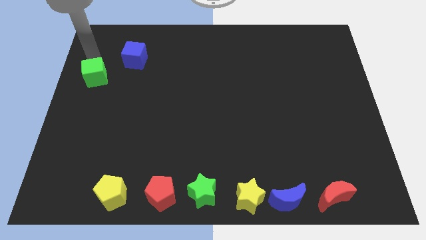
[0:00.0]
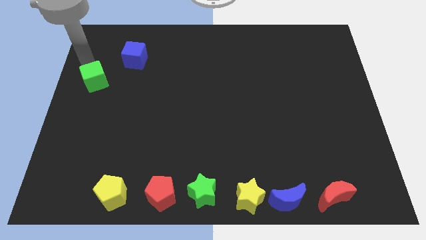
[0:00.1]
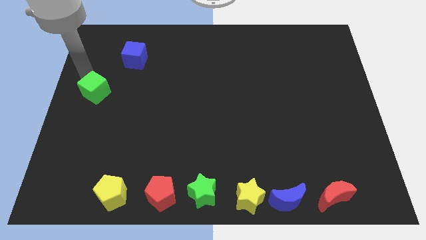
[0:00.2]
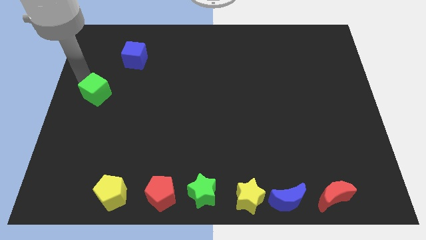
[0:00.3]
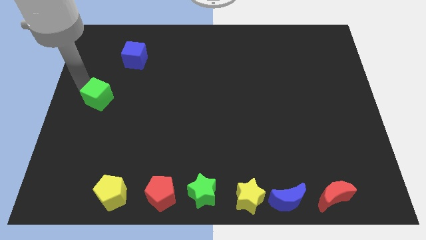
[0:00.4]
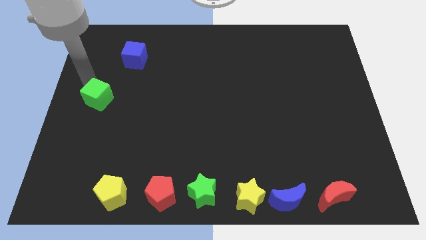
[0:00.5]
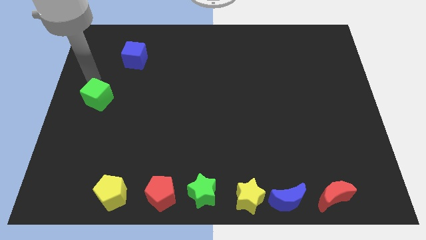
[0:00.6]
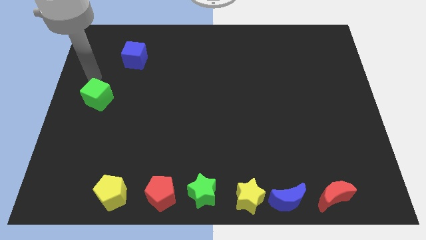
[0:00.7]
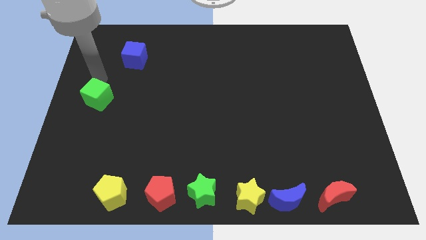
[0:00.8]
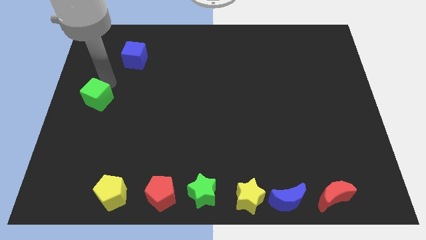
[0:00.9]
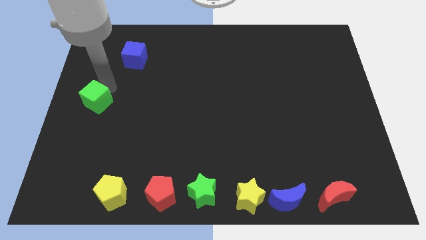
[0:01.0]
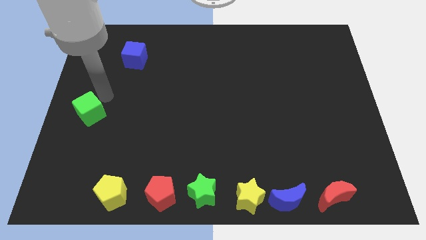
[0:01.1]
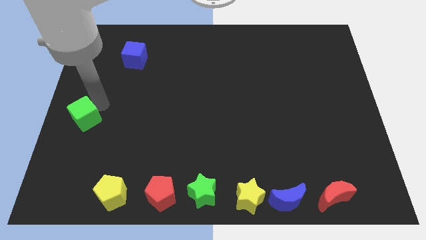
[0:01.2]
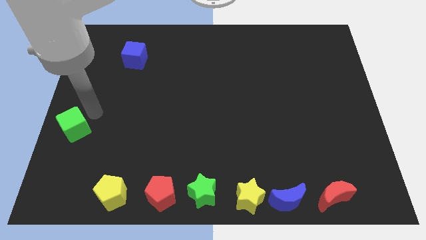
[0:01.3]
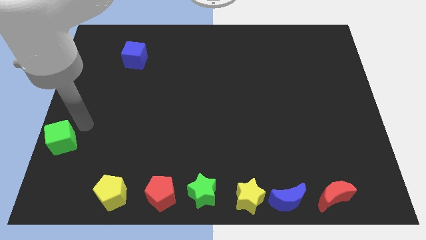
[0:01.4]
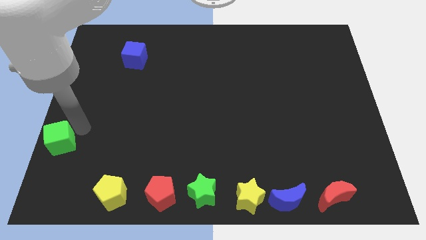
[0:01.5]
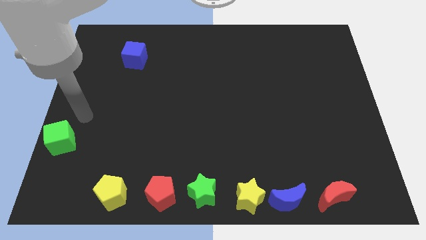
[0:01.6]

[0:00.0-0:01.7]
move the green cube towards bottom left side of the board

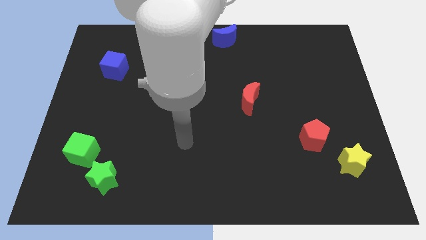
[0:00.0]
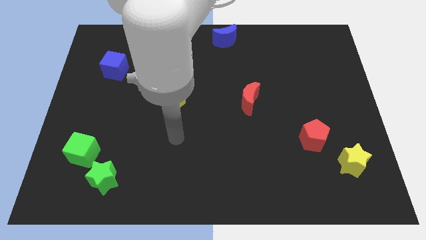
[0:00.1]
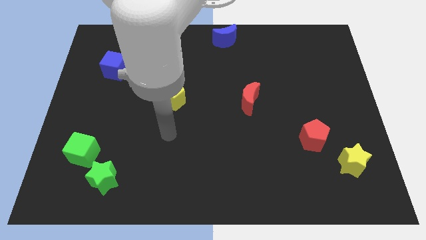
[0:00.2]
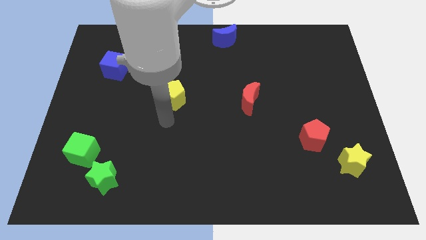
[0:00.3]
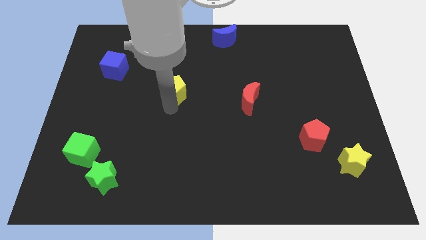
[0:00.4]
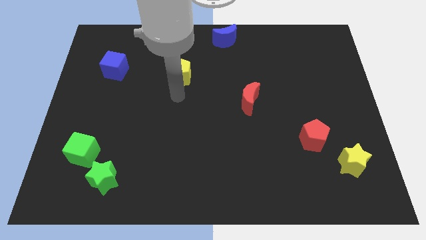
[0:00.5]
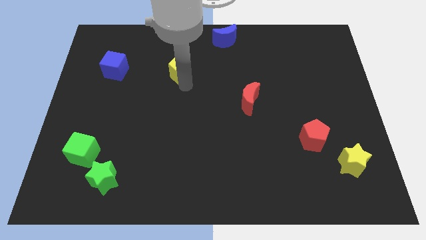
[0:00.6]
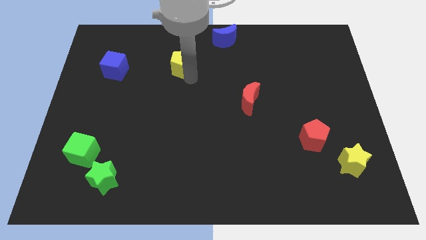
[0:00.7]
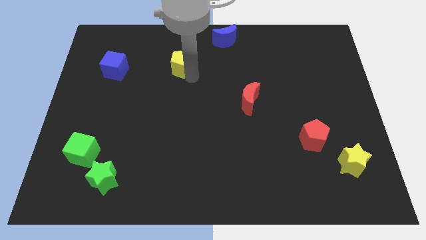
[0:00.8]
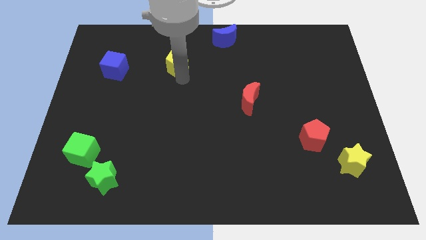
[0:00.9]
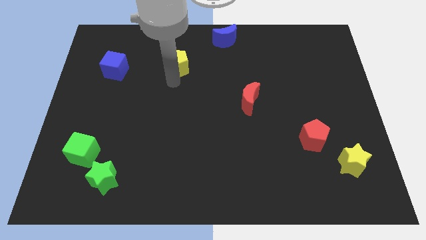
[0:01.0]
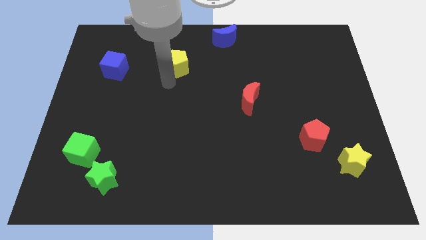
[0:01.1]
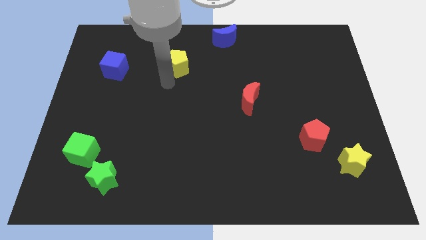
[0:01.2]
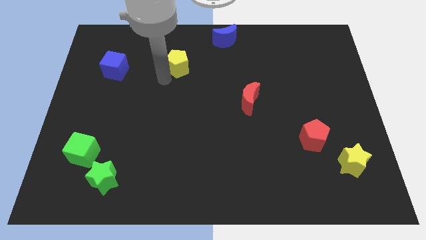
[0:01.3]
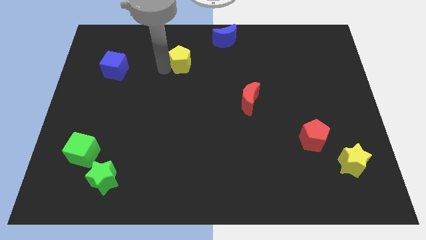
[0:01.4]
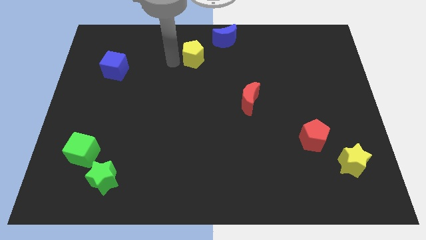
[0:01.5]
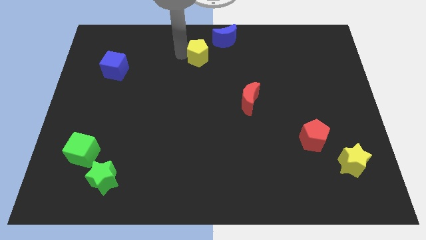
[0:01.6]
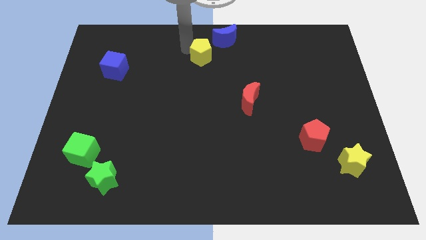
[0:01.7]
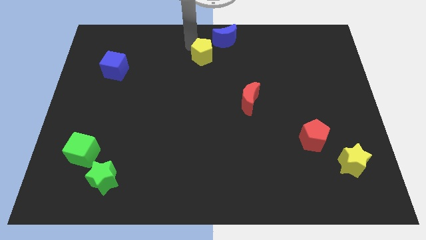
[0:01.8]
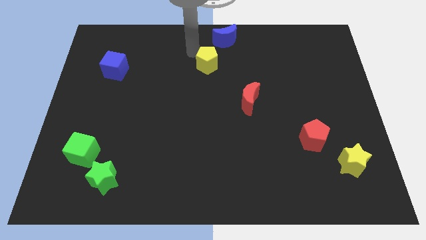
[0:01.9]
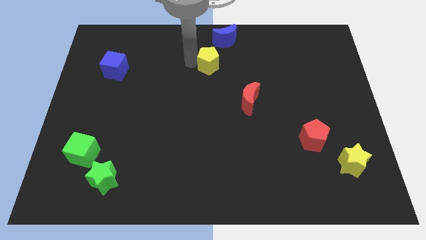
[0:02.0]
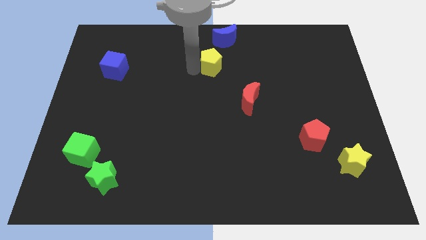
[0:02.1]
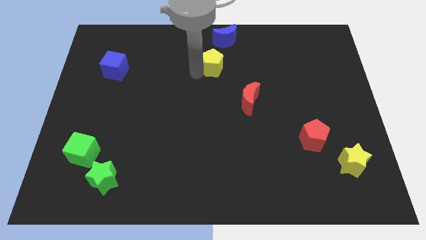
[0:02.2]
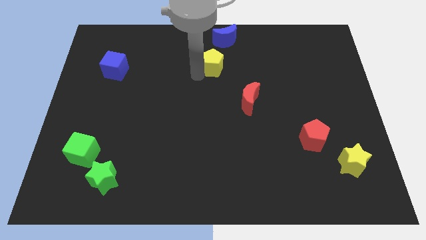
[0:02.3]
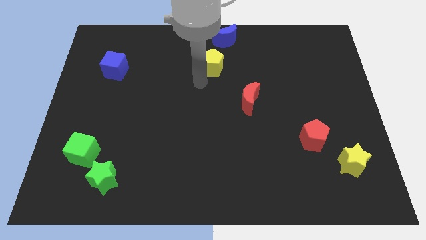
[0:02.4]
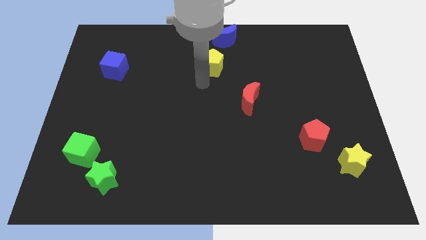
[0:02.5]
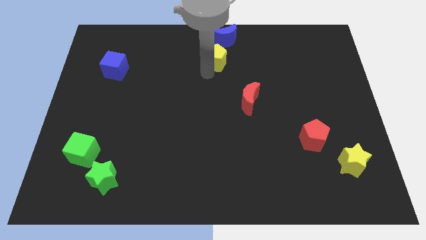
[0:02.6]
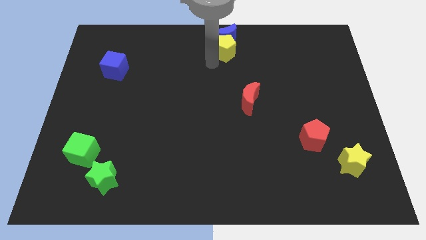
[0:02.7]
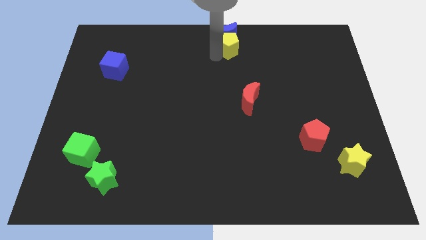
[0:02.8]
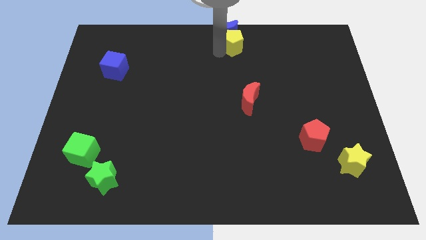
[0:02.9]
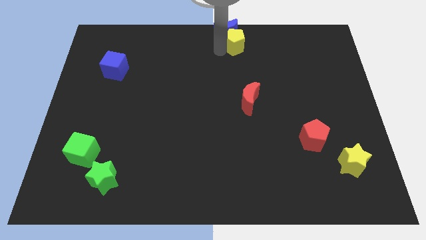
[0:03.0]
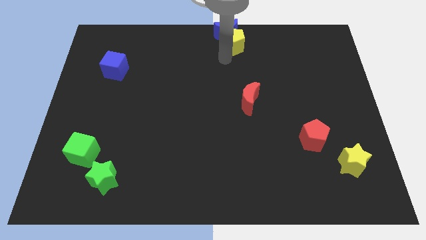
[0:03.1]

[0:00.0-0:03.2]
push the yellow pentagon into blue crescent

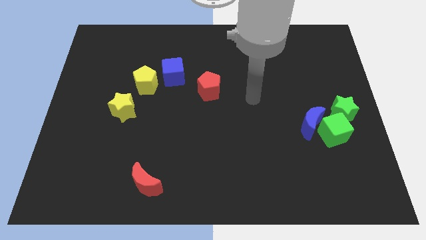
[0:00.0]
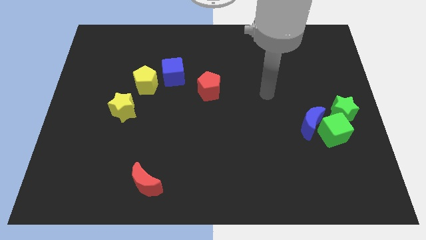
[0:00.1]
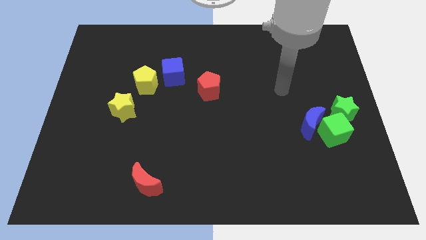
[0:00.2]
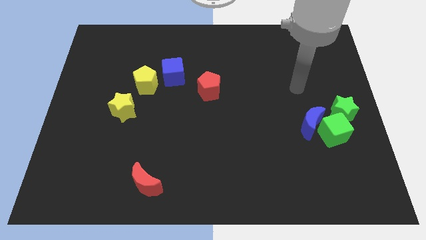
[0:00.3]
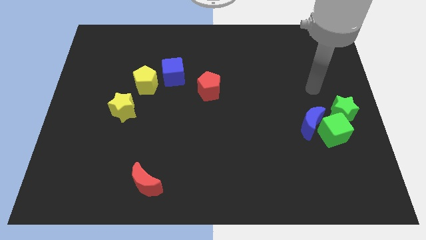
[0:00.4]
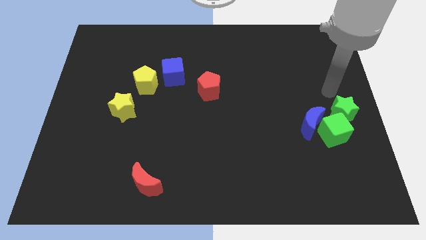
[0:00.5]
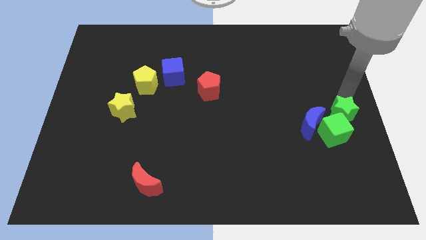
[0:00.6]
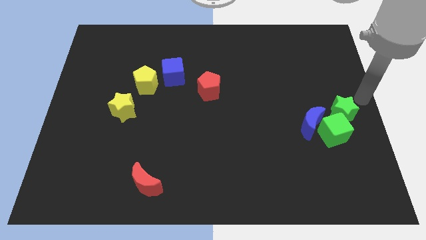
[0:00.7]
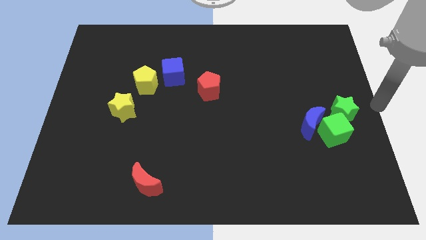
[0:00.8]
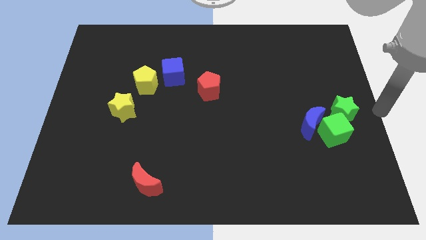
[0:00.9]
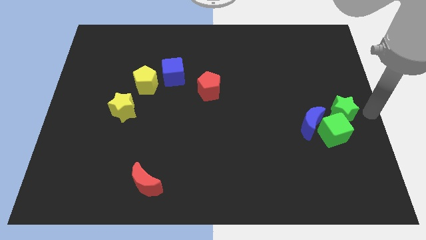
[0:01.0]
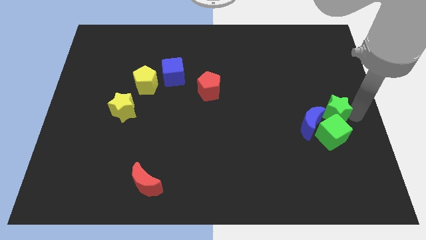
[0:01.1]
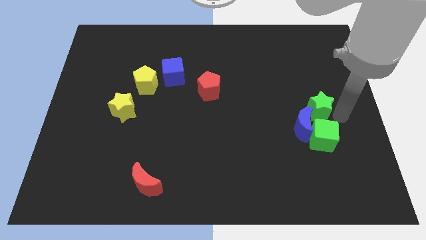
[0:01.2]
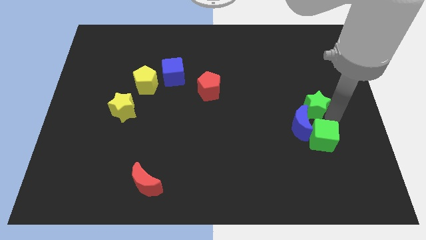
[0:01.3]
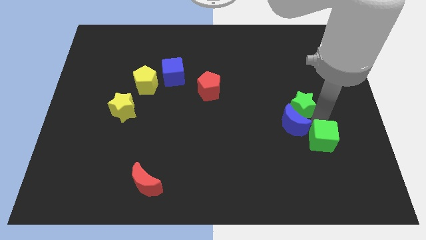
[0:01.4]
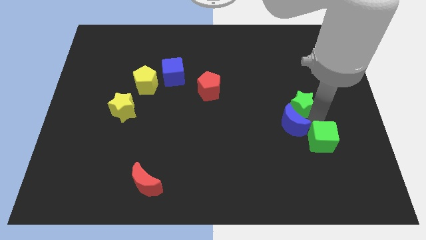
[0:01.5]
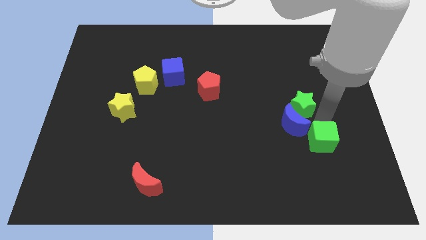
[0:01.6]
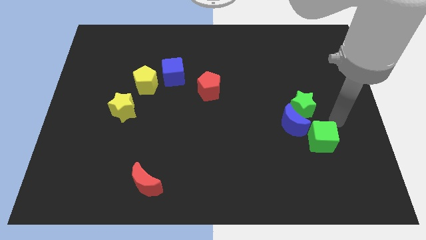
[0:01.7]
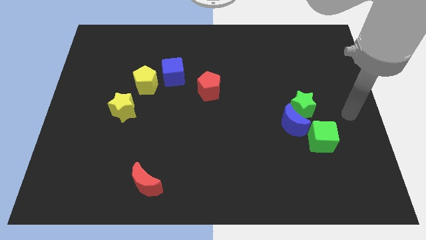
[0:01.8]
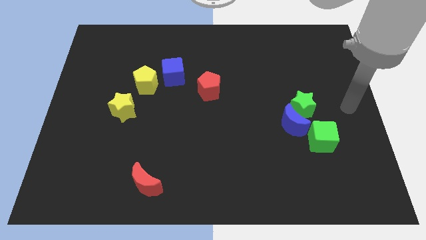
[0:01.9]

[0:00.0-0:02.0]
separate the green blocks towards blue moon

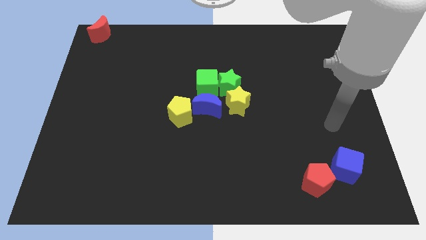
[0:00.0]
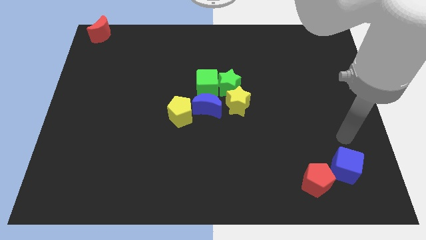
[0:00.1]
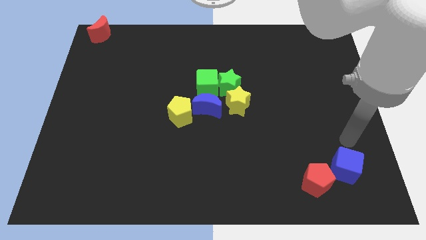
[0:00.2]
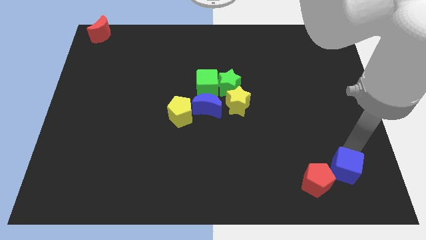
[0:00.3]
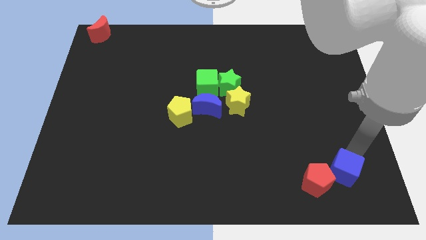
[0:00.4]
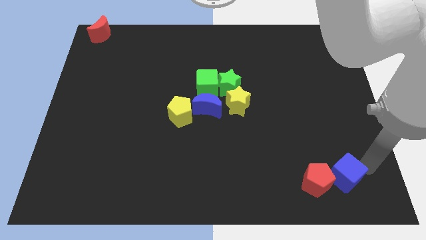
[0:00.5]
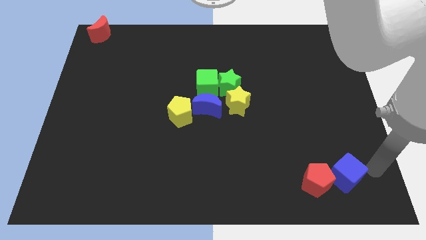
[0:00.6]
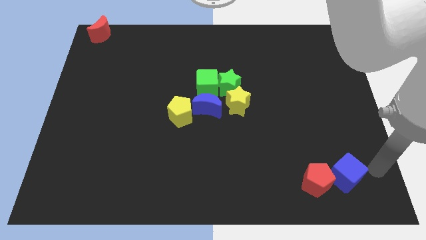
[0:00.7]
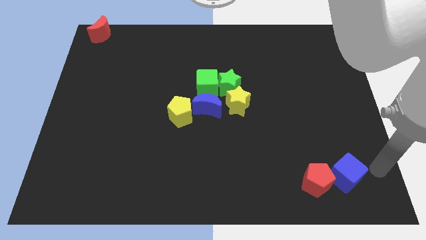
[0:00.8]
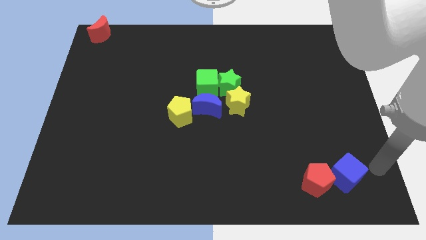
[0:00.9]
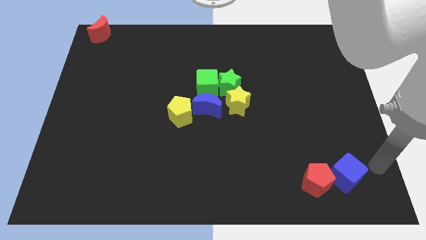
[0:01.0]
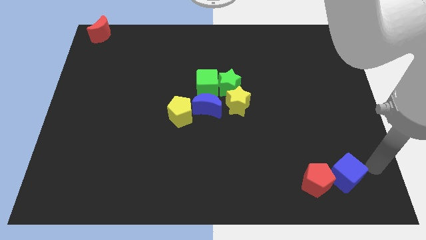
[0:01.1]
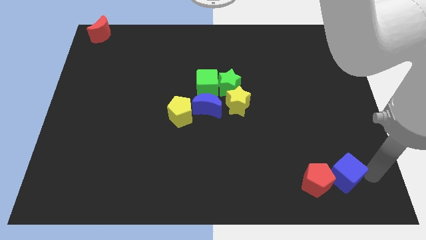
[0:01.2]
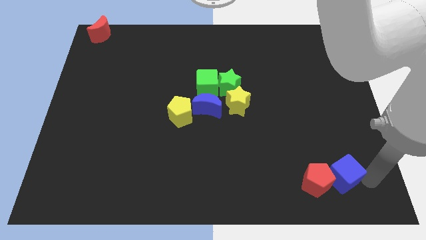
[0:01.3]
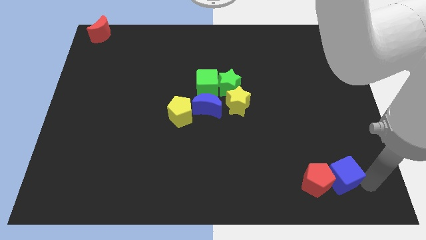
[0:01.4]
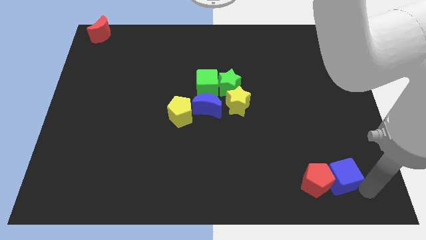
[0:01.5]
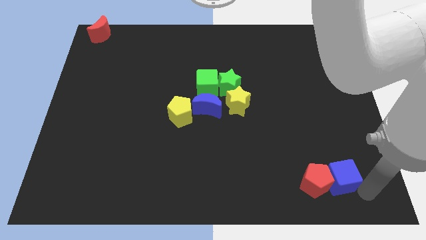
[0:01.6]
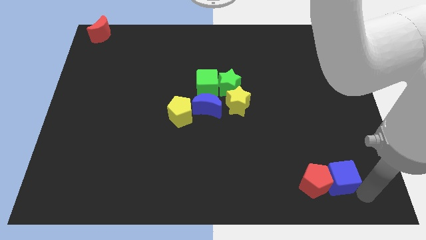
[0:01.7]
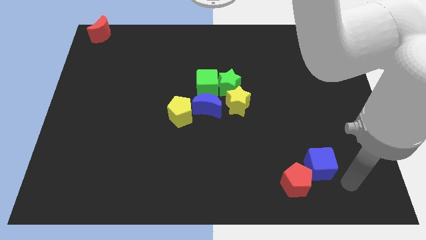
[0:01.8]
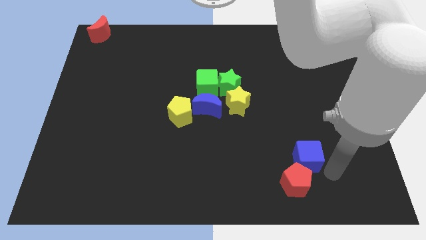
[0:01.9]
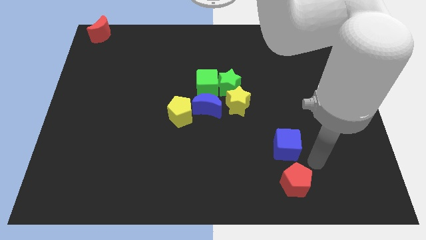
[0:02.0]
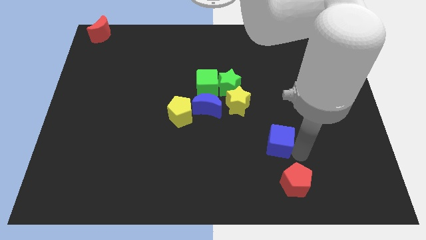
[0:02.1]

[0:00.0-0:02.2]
place the blue cube above the red pentagon
